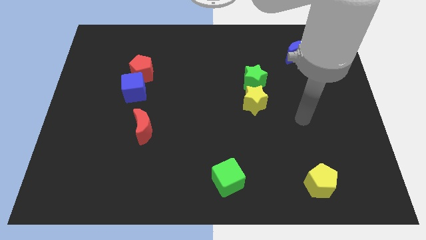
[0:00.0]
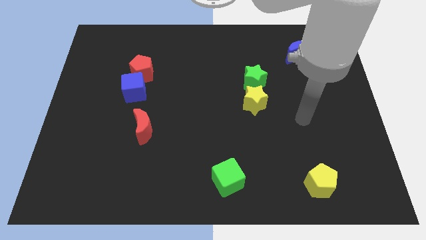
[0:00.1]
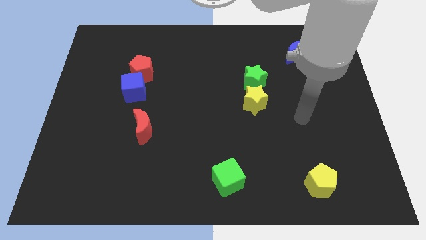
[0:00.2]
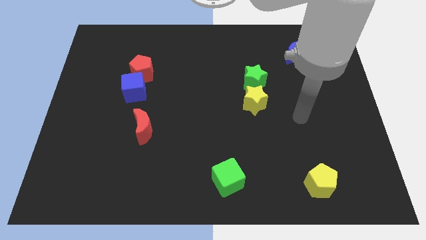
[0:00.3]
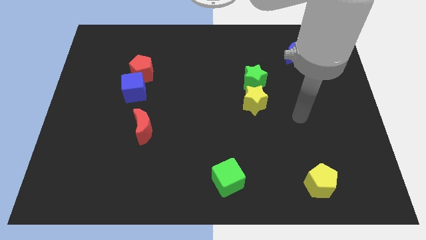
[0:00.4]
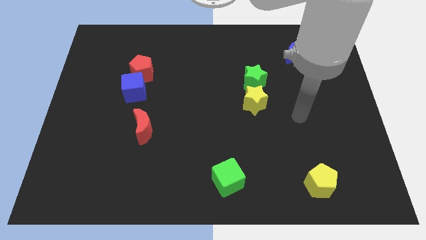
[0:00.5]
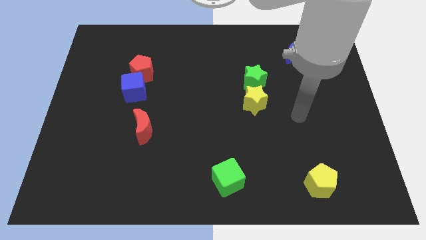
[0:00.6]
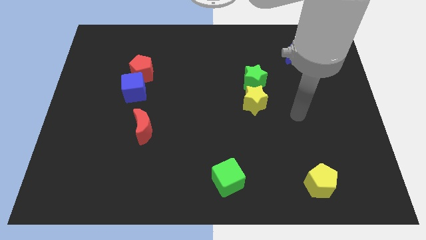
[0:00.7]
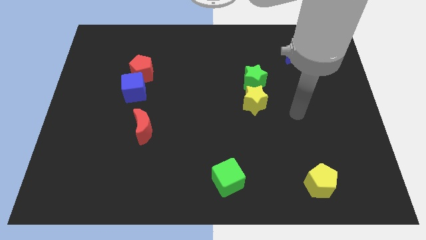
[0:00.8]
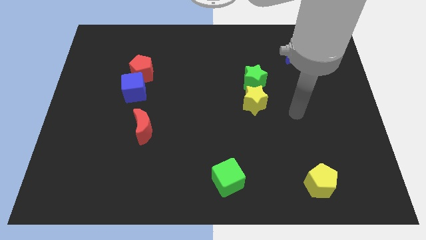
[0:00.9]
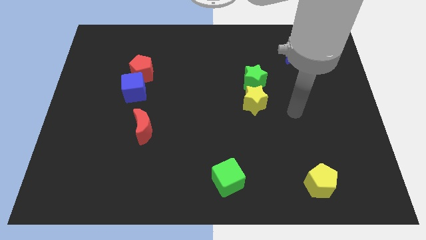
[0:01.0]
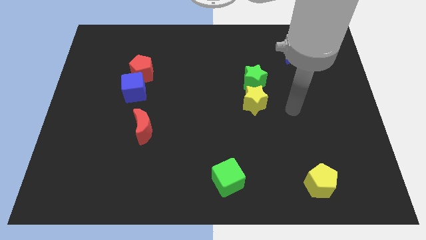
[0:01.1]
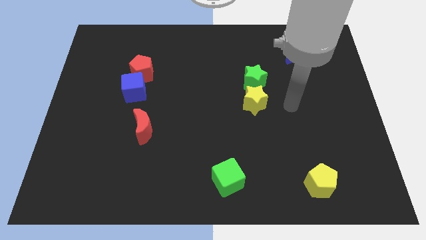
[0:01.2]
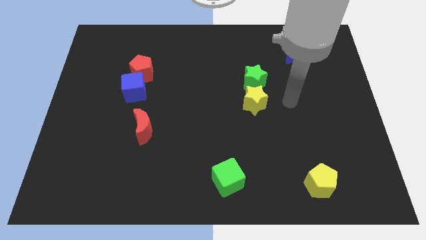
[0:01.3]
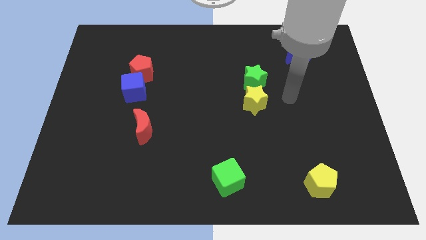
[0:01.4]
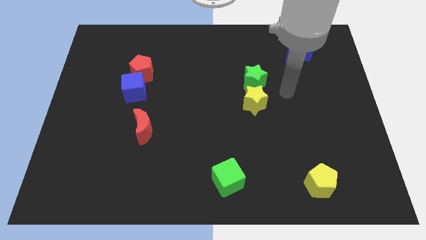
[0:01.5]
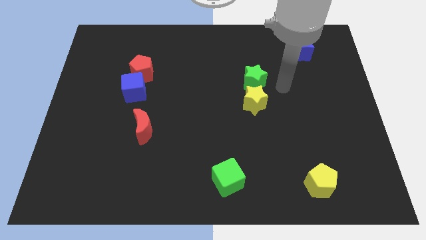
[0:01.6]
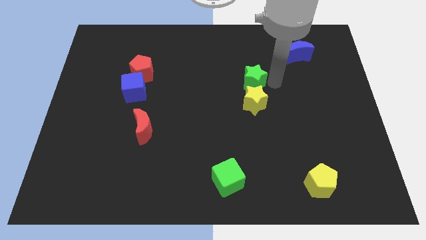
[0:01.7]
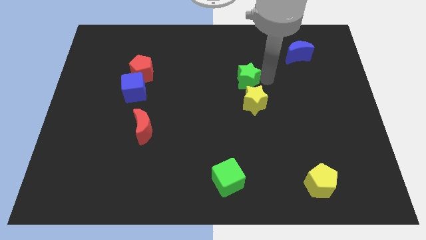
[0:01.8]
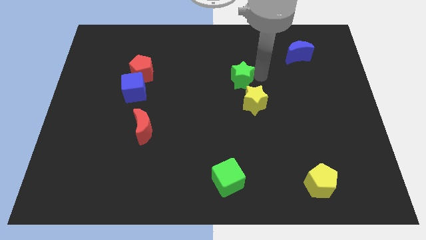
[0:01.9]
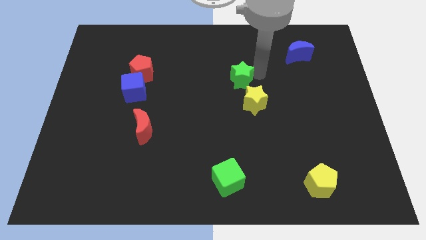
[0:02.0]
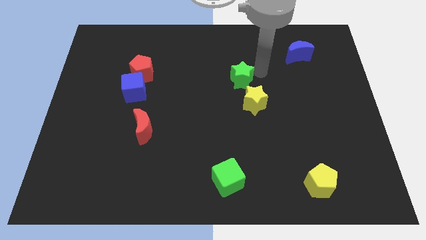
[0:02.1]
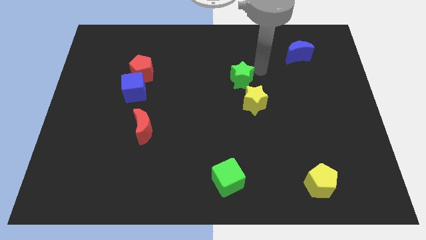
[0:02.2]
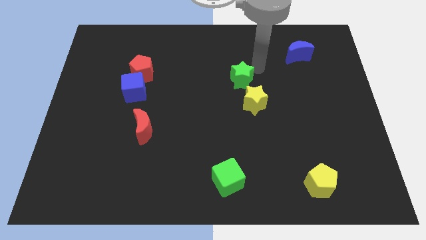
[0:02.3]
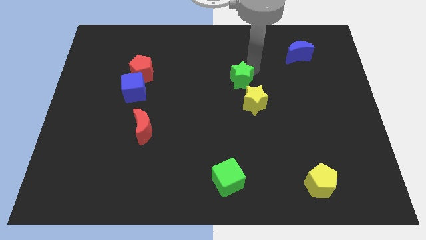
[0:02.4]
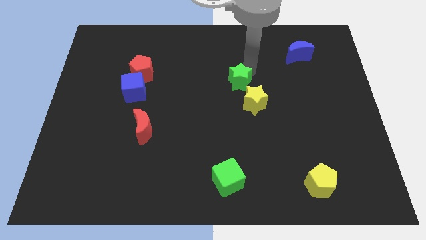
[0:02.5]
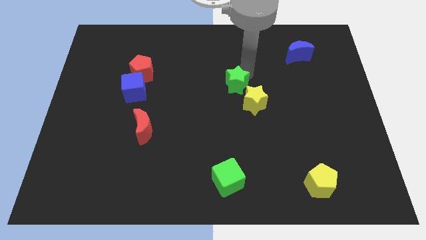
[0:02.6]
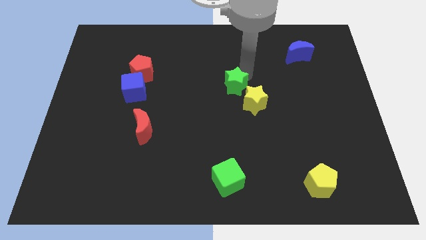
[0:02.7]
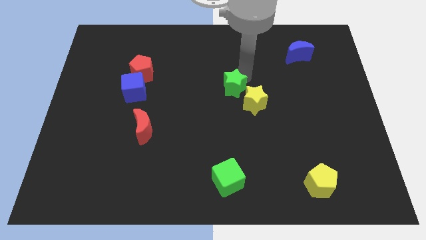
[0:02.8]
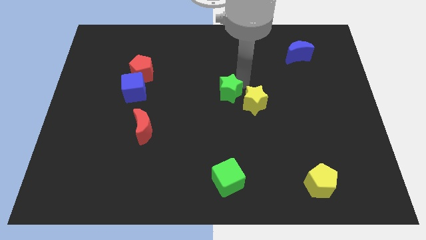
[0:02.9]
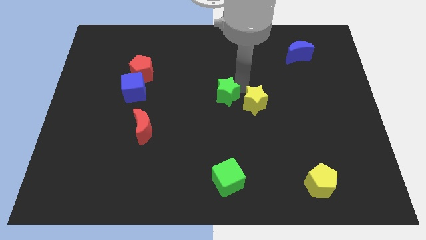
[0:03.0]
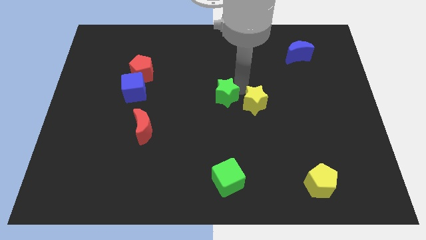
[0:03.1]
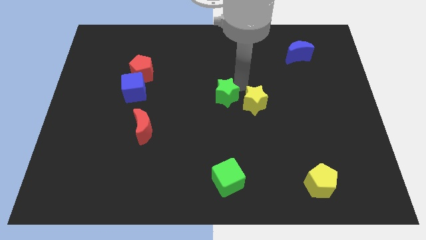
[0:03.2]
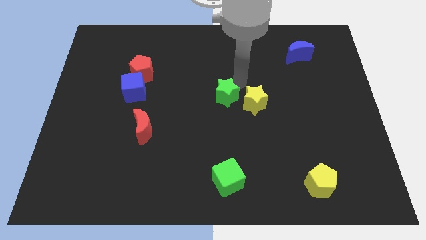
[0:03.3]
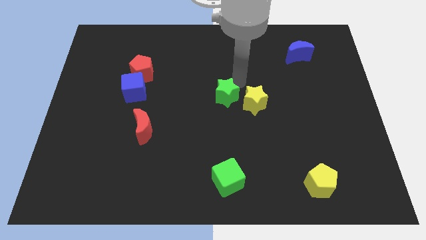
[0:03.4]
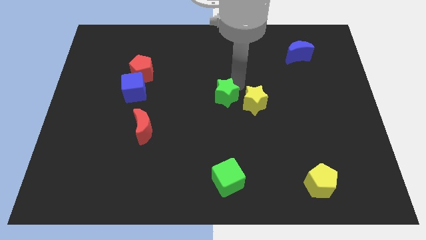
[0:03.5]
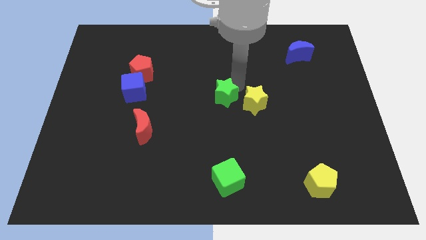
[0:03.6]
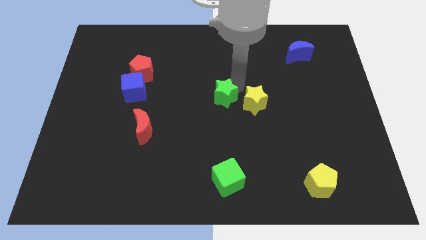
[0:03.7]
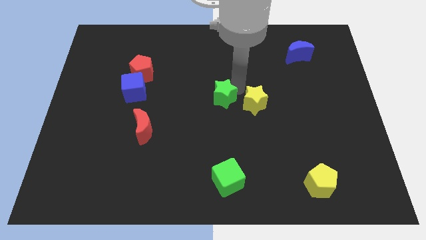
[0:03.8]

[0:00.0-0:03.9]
move the green star towards centre of the board

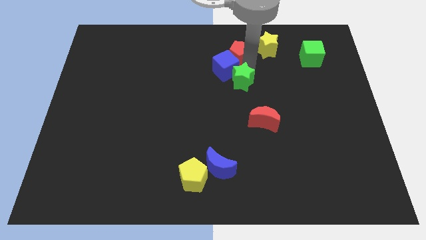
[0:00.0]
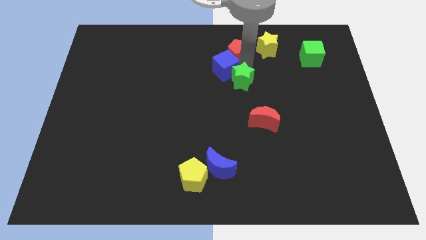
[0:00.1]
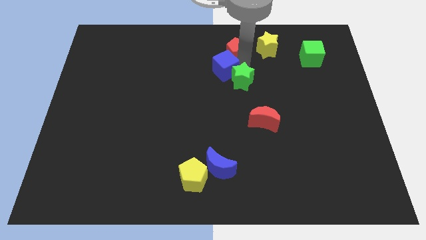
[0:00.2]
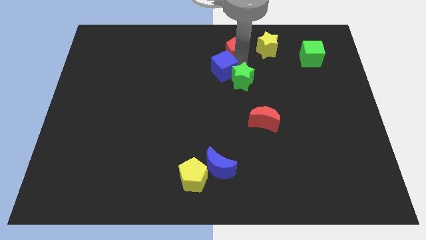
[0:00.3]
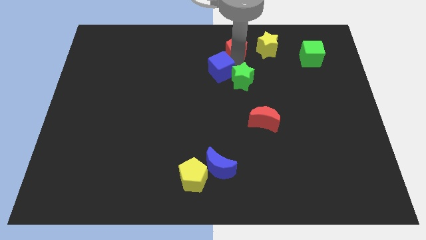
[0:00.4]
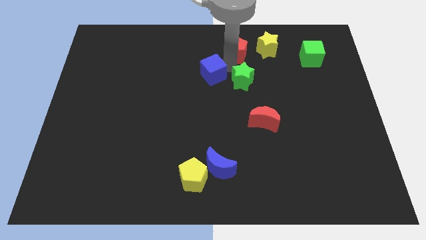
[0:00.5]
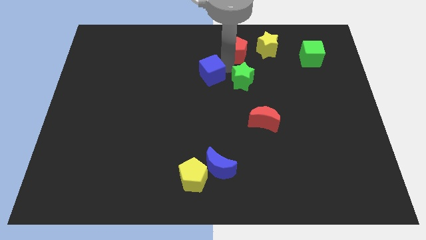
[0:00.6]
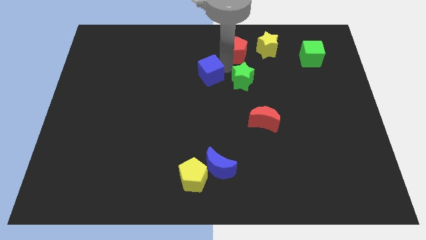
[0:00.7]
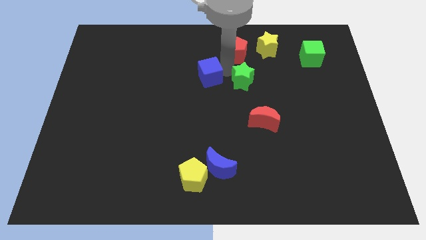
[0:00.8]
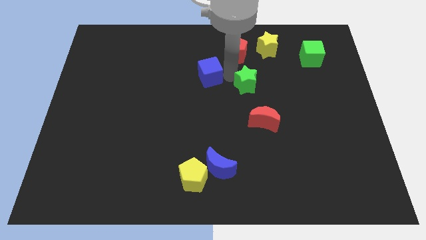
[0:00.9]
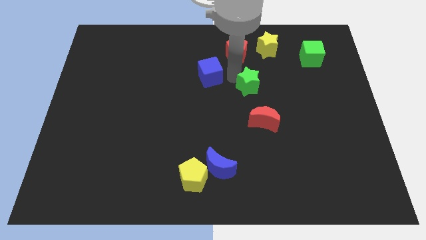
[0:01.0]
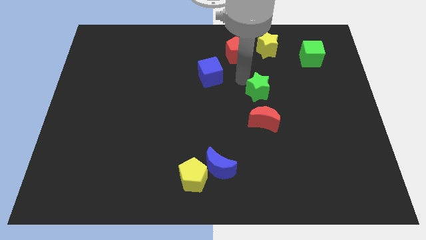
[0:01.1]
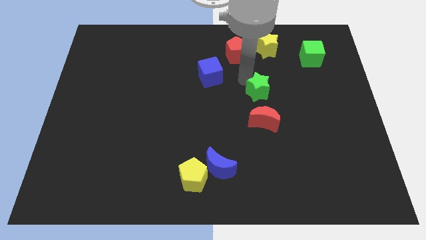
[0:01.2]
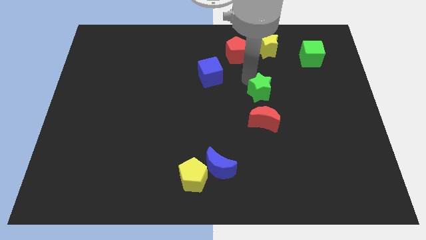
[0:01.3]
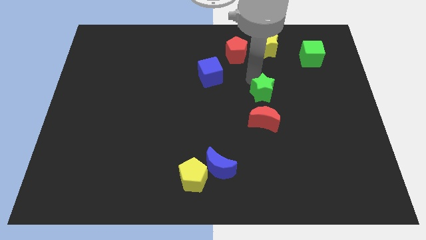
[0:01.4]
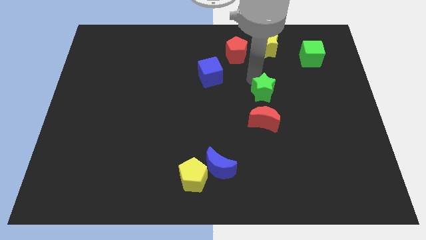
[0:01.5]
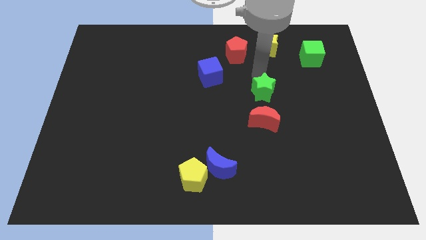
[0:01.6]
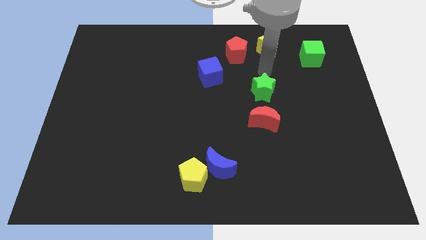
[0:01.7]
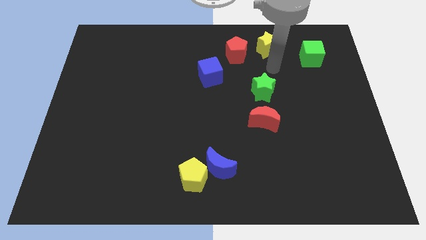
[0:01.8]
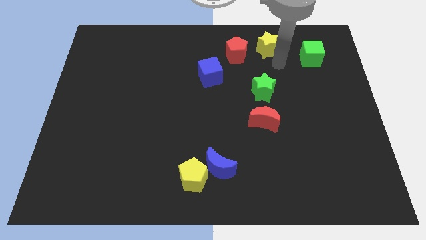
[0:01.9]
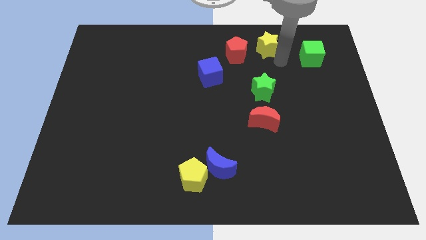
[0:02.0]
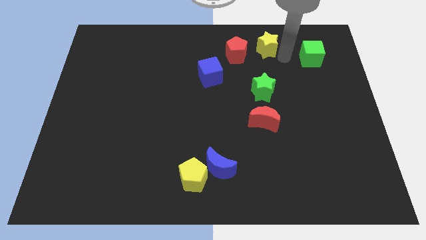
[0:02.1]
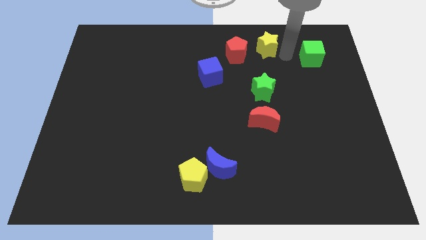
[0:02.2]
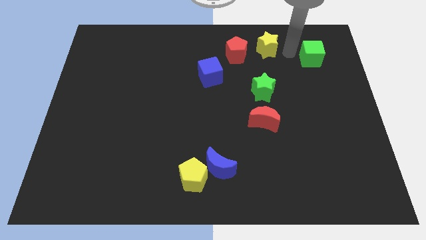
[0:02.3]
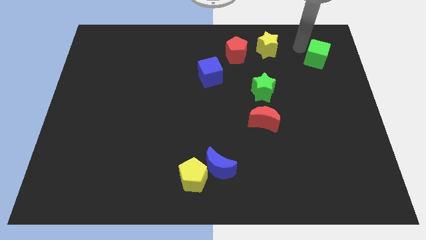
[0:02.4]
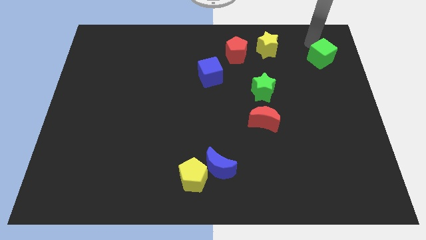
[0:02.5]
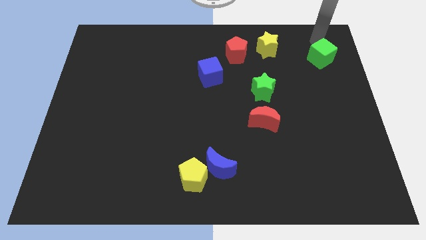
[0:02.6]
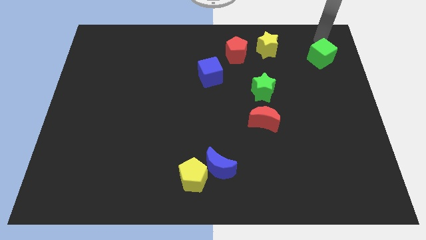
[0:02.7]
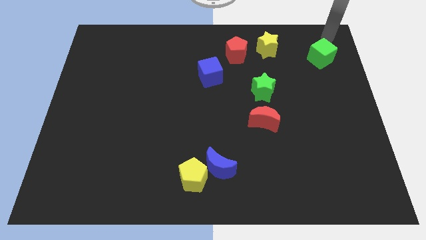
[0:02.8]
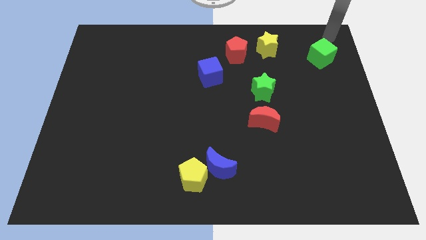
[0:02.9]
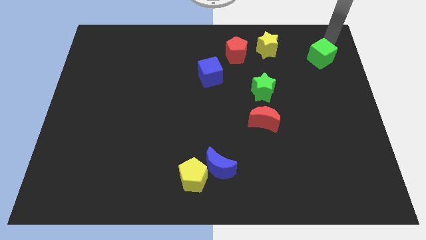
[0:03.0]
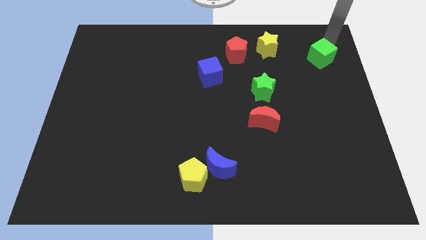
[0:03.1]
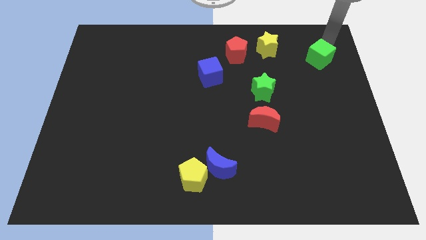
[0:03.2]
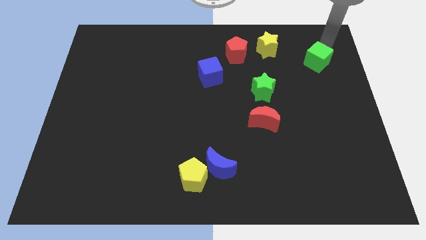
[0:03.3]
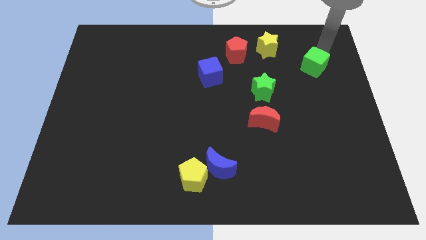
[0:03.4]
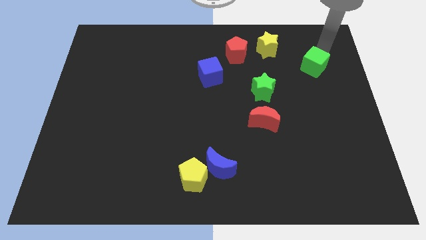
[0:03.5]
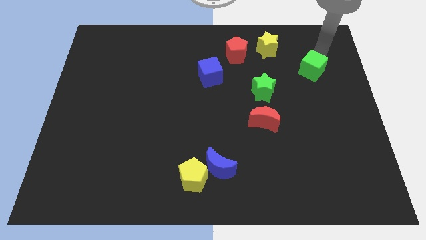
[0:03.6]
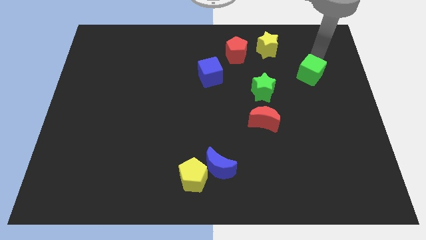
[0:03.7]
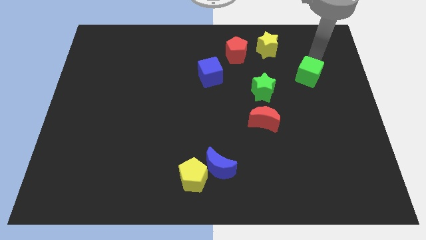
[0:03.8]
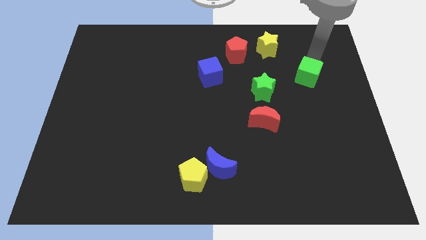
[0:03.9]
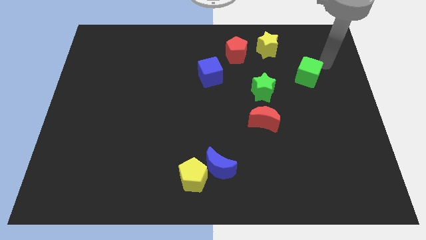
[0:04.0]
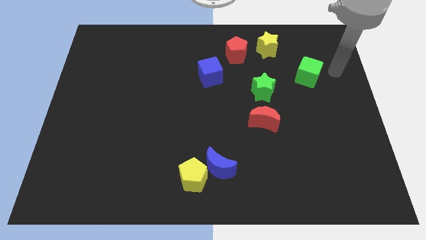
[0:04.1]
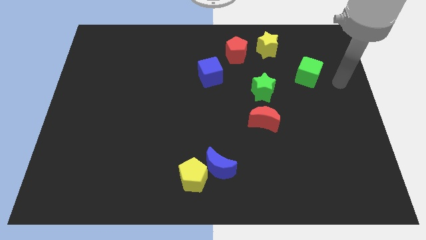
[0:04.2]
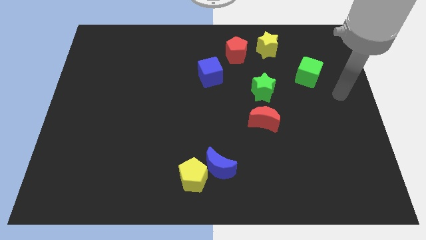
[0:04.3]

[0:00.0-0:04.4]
place the green cube diagonal right to the green star

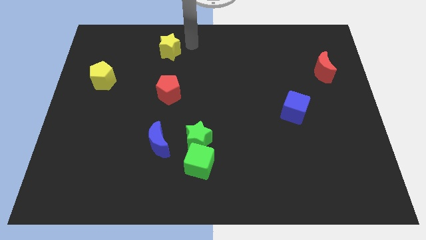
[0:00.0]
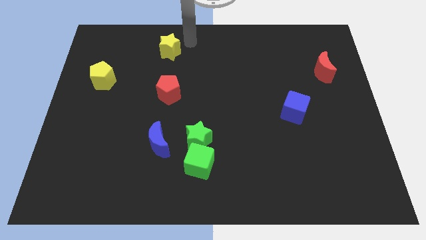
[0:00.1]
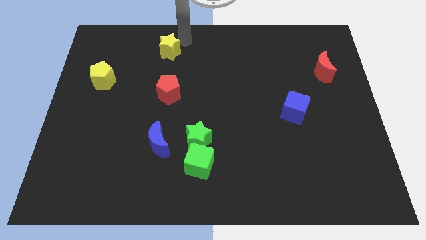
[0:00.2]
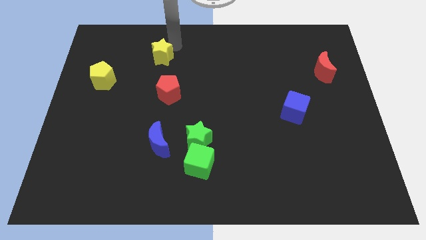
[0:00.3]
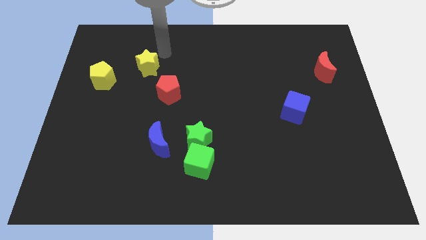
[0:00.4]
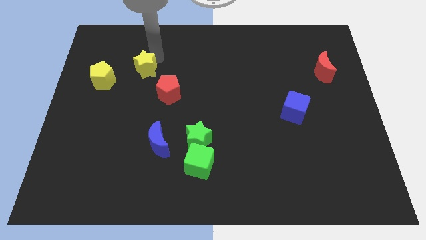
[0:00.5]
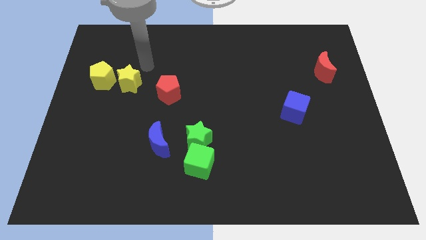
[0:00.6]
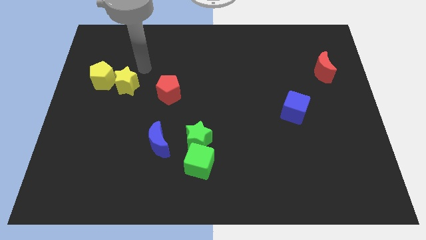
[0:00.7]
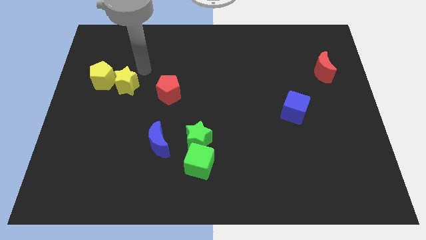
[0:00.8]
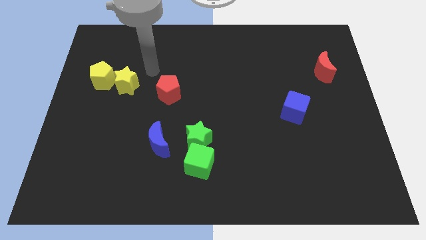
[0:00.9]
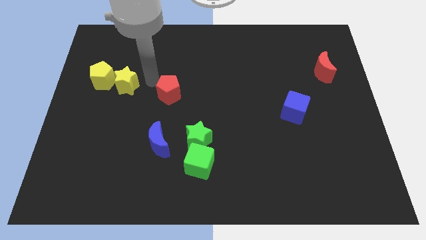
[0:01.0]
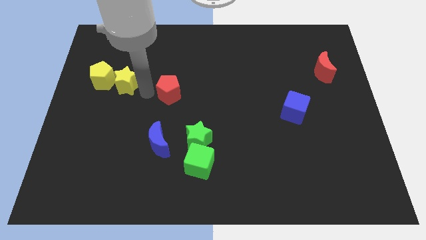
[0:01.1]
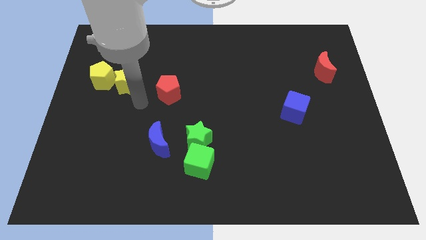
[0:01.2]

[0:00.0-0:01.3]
move yellow star right to the yellow pentagon
